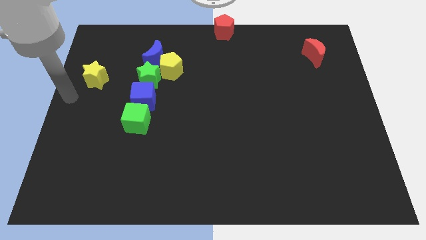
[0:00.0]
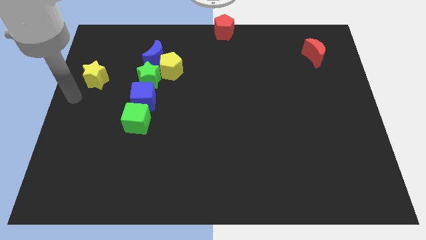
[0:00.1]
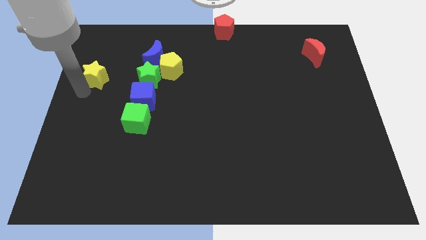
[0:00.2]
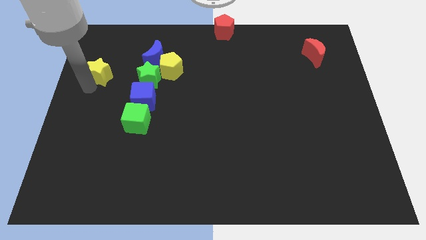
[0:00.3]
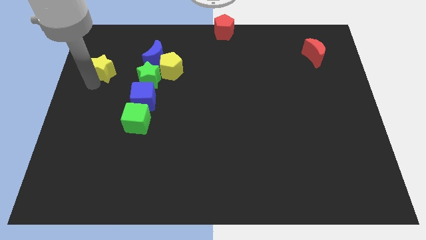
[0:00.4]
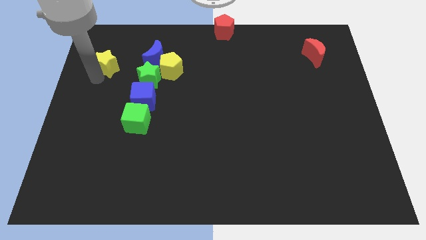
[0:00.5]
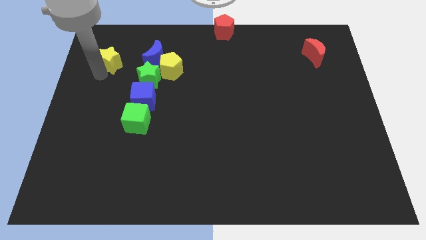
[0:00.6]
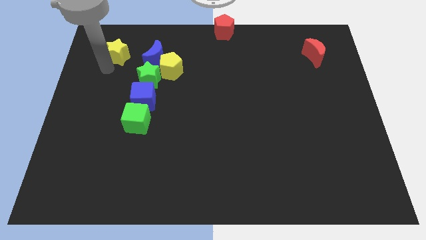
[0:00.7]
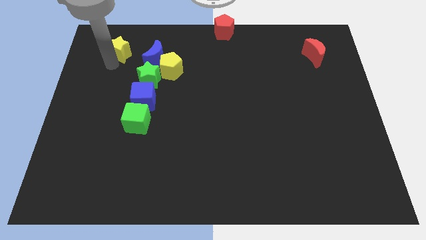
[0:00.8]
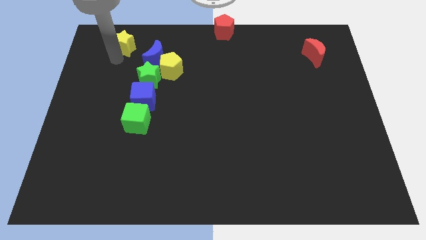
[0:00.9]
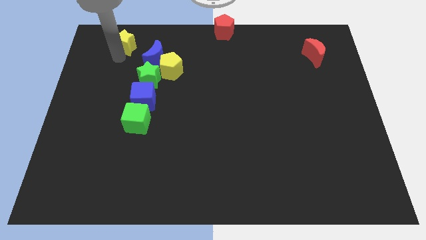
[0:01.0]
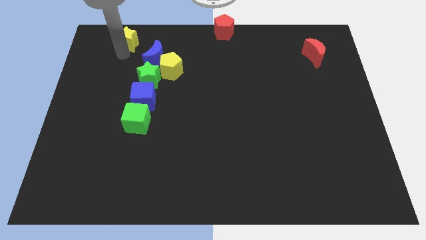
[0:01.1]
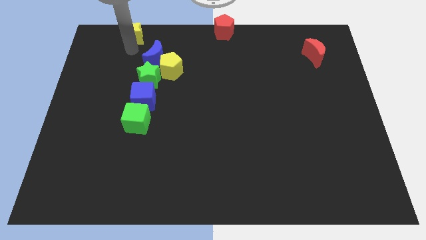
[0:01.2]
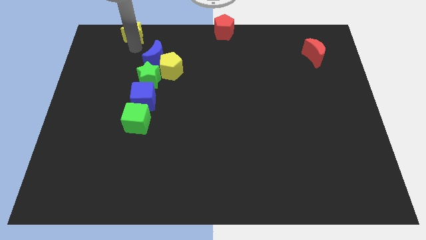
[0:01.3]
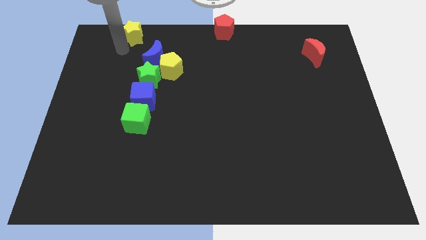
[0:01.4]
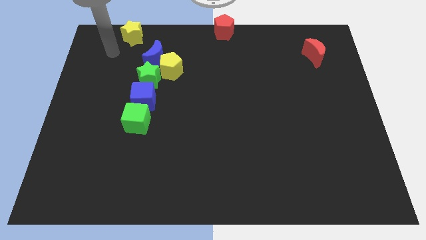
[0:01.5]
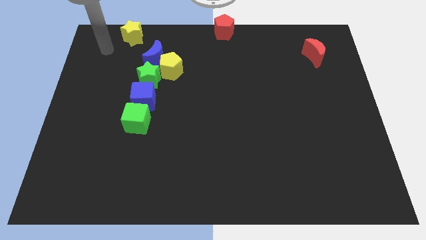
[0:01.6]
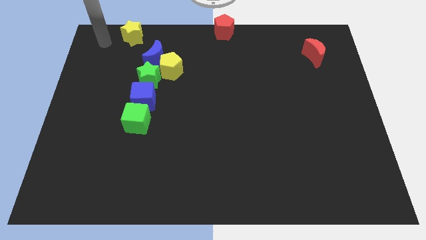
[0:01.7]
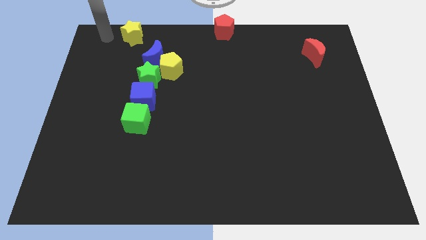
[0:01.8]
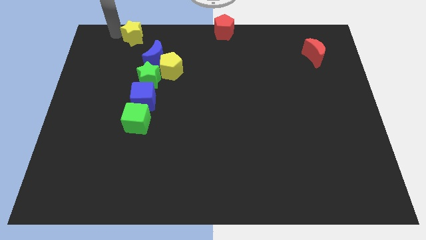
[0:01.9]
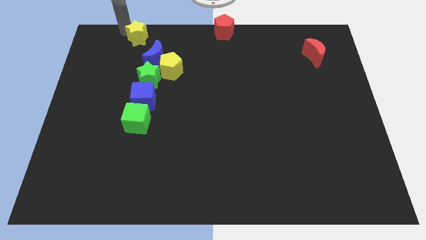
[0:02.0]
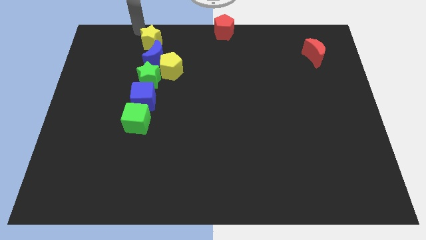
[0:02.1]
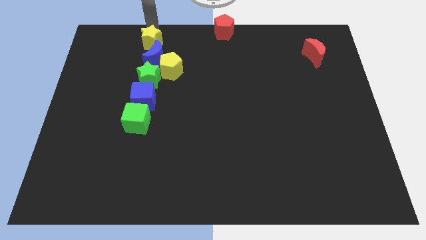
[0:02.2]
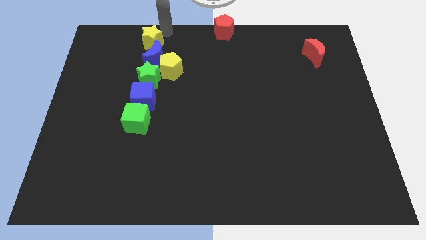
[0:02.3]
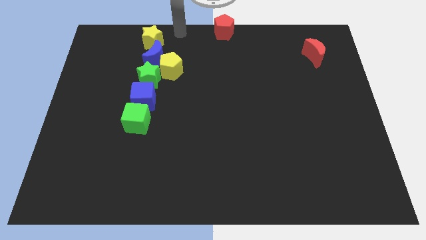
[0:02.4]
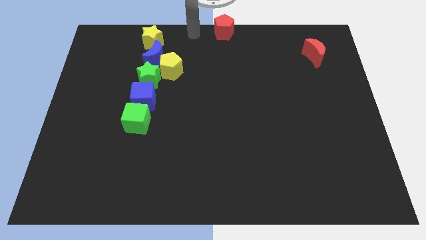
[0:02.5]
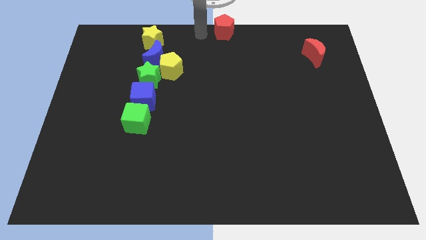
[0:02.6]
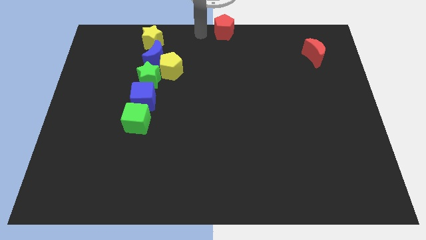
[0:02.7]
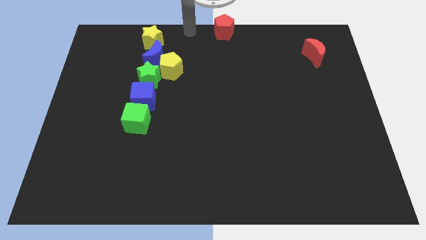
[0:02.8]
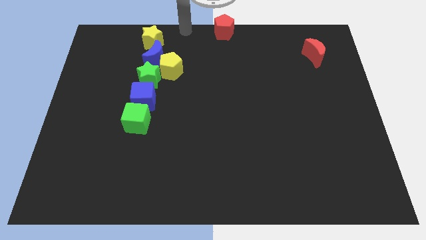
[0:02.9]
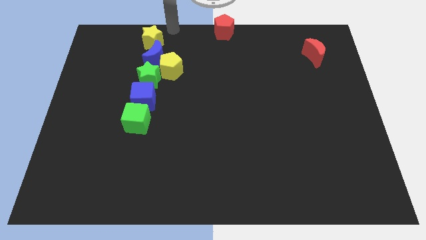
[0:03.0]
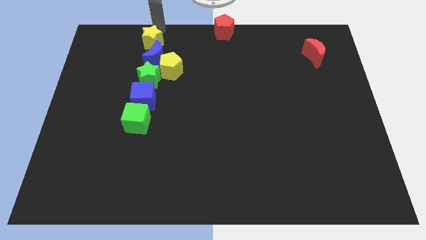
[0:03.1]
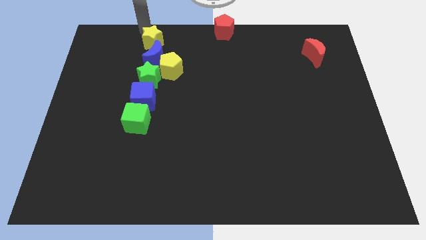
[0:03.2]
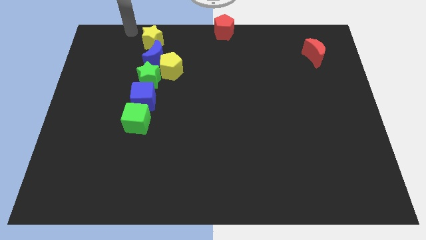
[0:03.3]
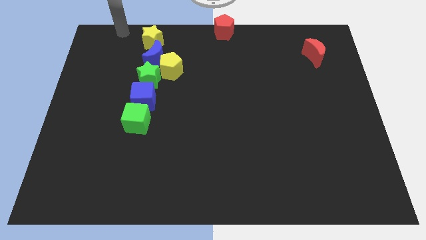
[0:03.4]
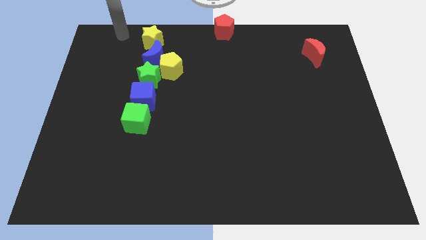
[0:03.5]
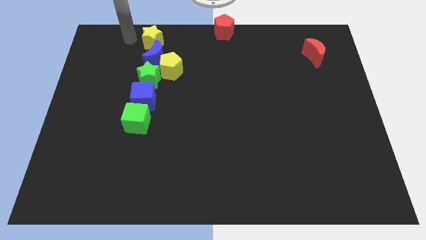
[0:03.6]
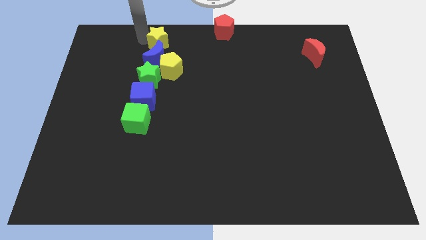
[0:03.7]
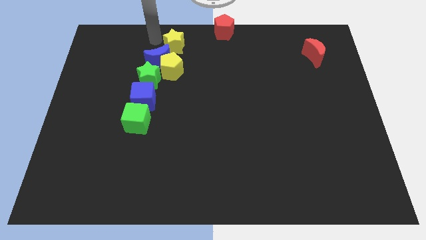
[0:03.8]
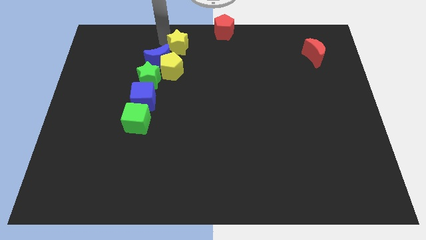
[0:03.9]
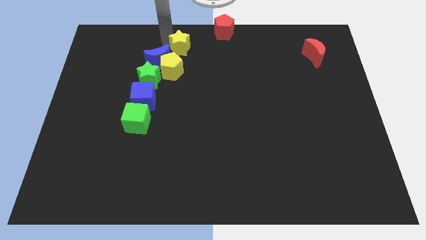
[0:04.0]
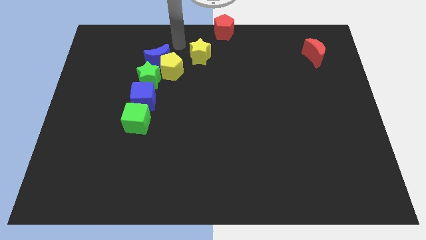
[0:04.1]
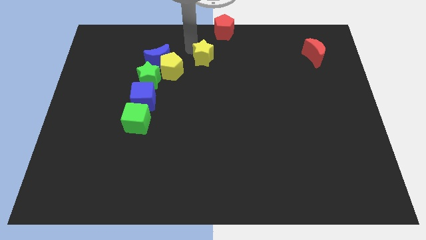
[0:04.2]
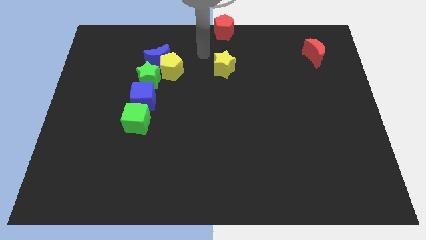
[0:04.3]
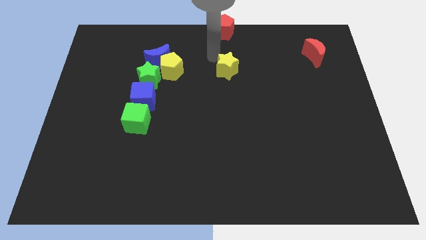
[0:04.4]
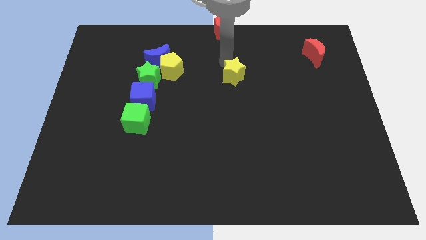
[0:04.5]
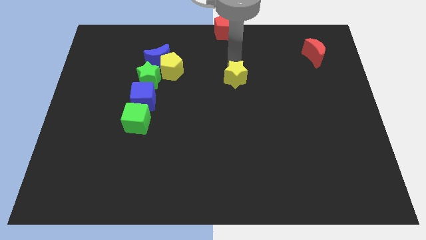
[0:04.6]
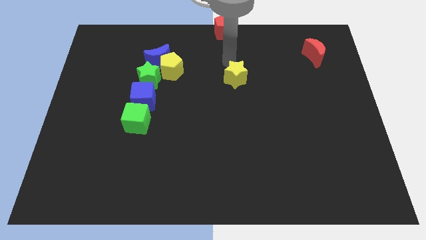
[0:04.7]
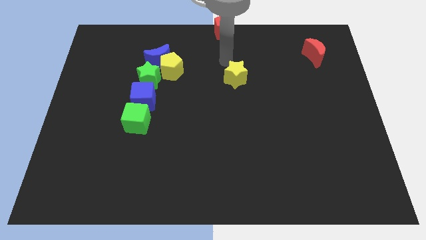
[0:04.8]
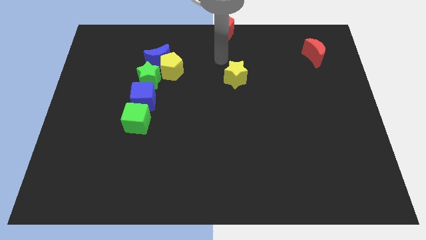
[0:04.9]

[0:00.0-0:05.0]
move the yellow star underneath the red pentagon

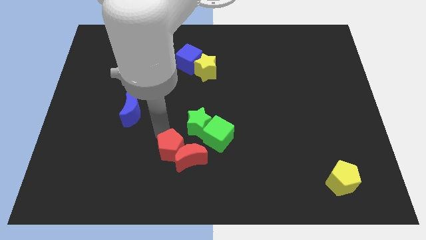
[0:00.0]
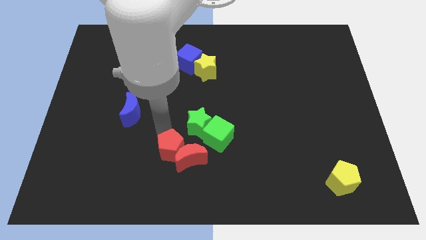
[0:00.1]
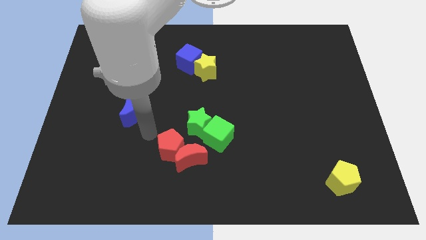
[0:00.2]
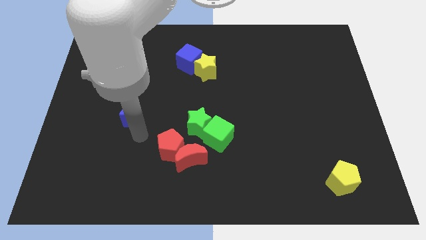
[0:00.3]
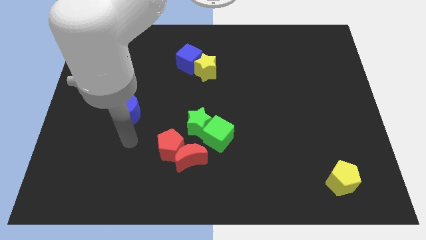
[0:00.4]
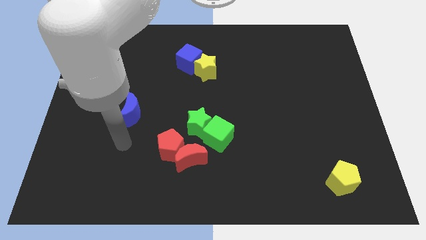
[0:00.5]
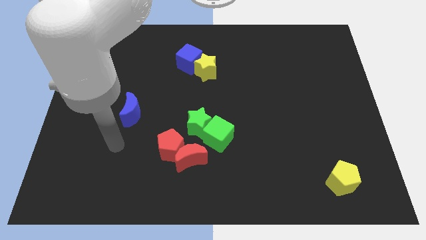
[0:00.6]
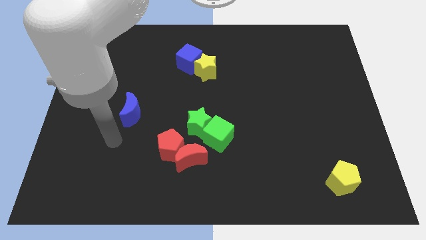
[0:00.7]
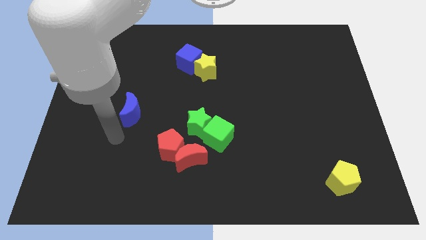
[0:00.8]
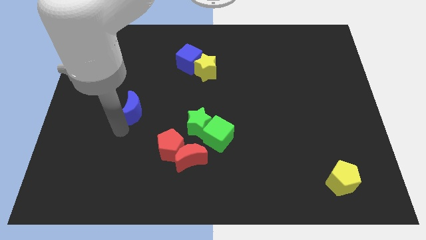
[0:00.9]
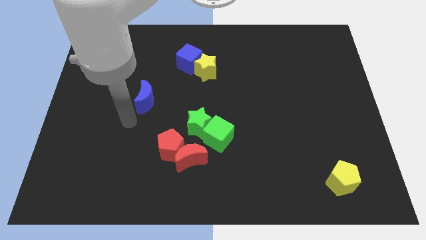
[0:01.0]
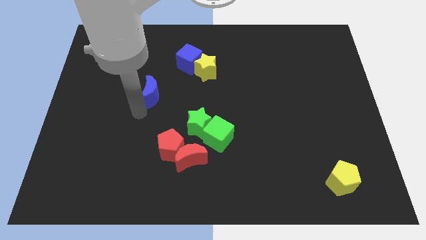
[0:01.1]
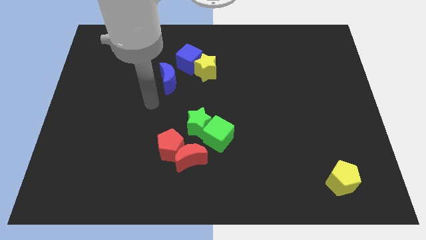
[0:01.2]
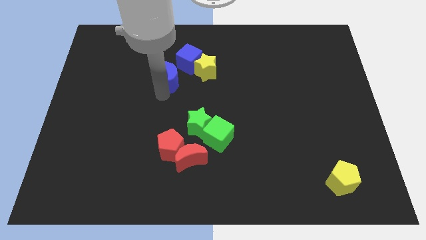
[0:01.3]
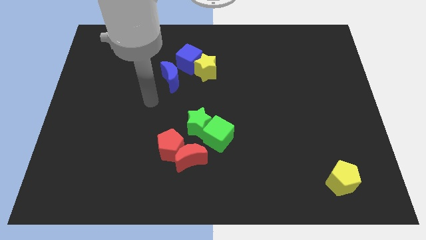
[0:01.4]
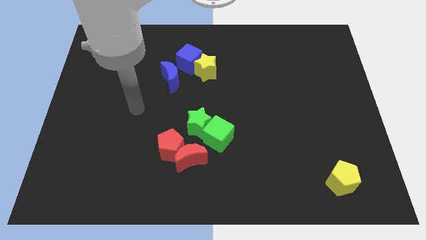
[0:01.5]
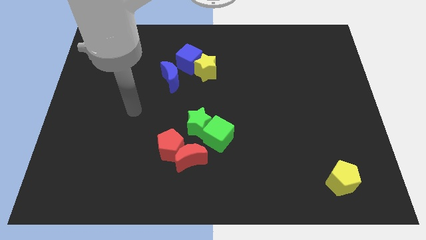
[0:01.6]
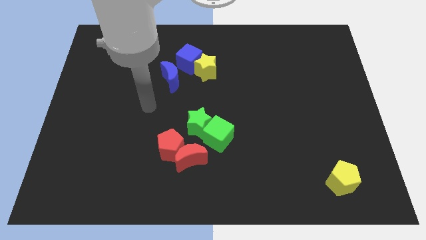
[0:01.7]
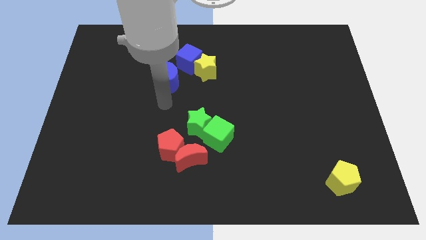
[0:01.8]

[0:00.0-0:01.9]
push the blue moon diagonal below blue cube

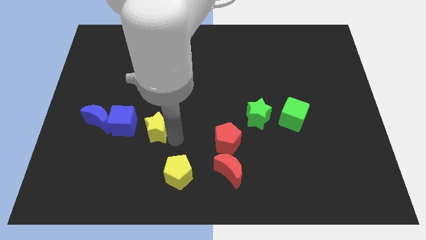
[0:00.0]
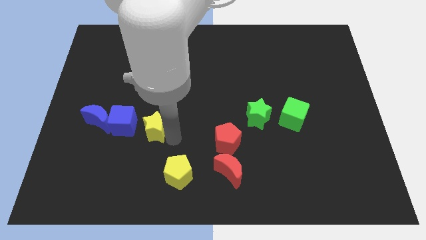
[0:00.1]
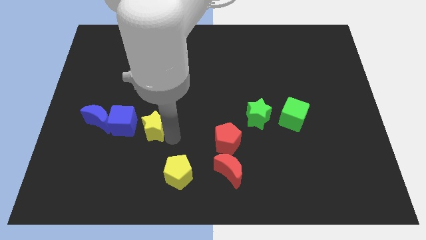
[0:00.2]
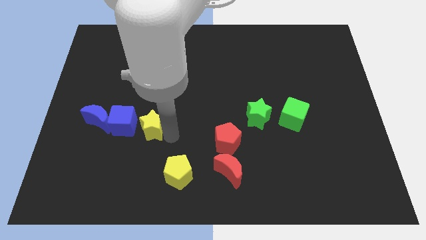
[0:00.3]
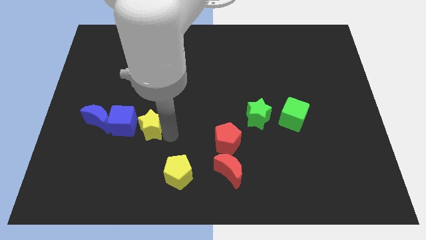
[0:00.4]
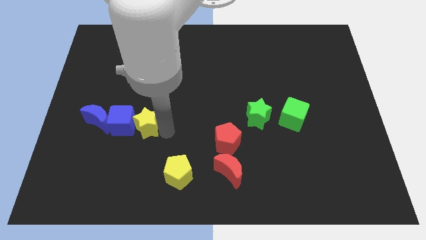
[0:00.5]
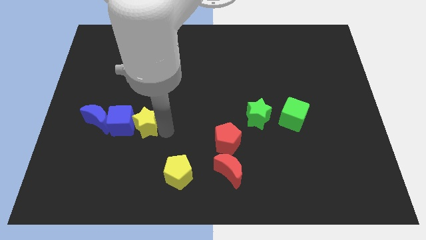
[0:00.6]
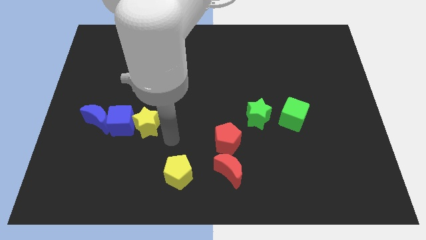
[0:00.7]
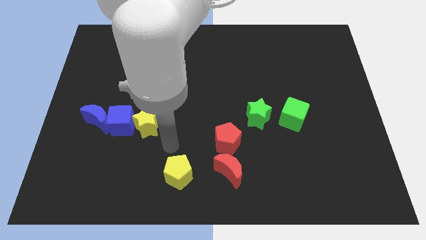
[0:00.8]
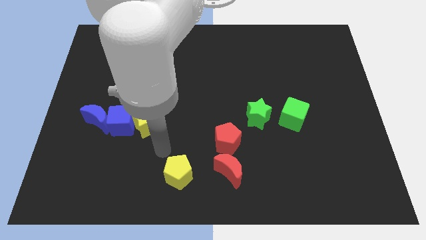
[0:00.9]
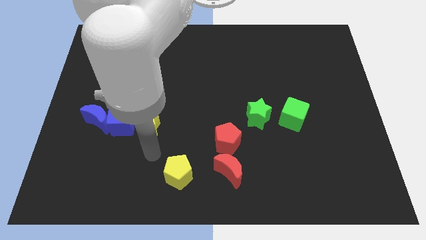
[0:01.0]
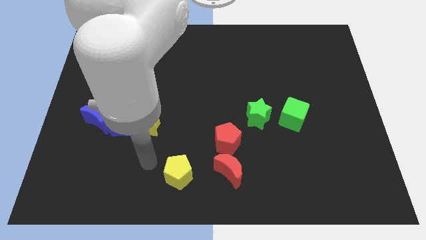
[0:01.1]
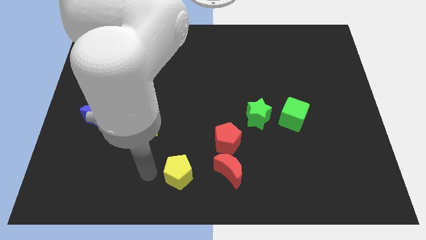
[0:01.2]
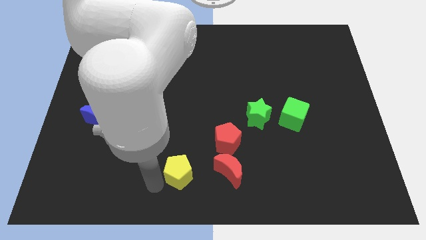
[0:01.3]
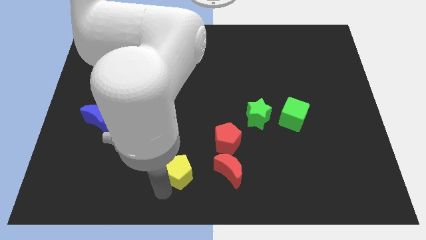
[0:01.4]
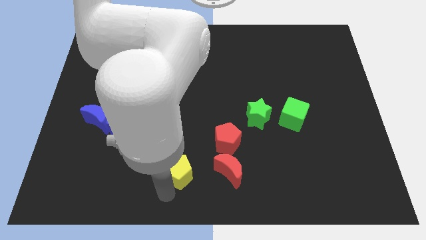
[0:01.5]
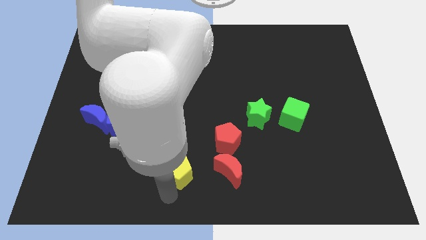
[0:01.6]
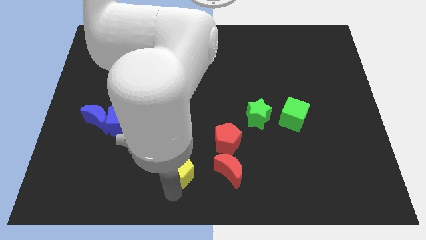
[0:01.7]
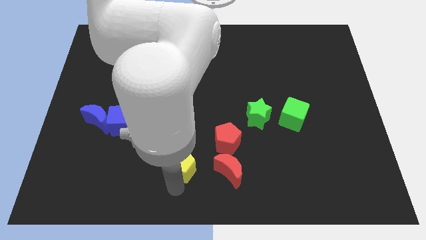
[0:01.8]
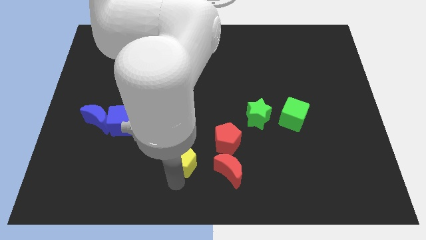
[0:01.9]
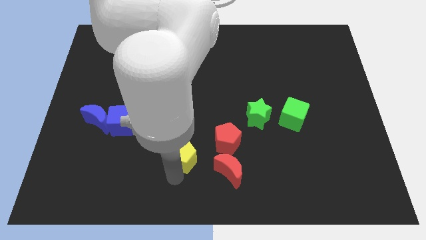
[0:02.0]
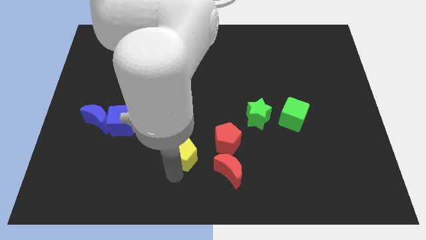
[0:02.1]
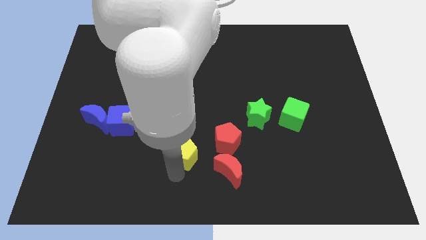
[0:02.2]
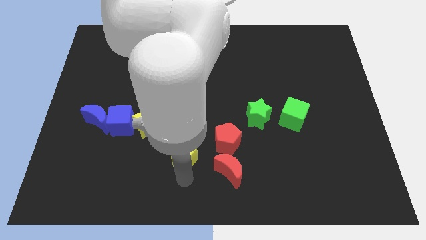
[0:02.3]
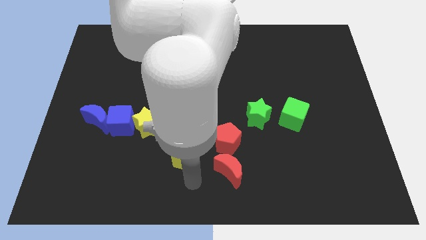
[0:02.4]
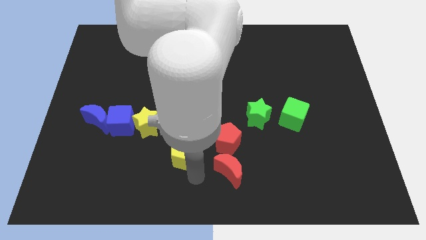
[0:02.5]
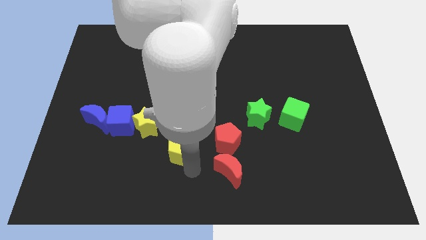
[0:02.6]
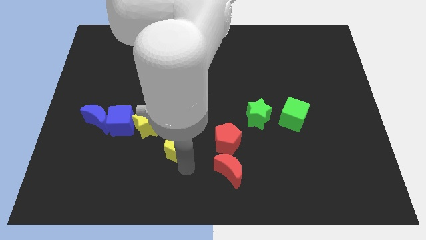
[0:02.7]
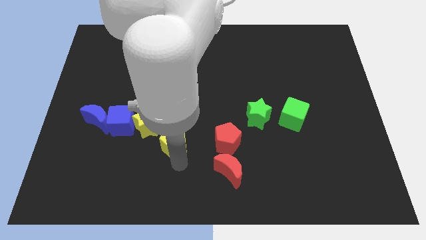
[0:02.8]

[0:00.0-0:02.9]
place the yellow pentagon top left to the red moon
